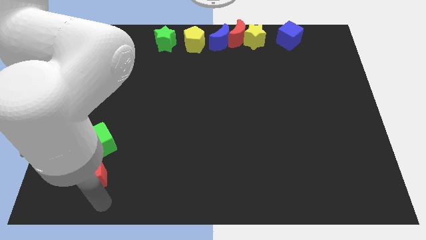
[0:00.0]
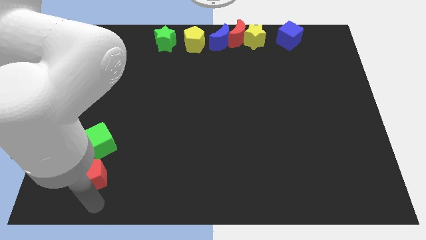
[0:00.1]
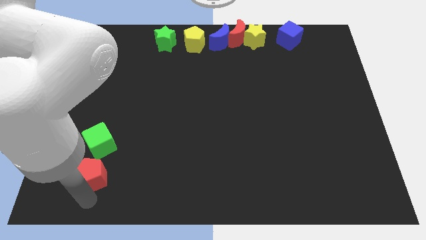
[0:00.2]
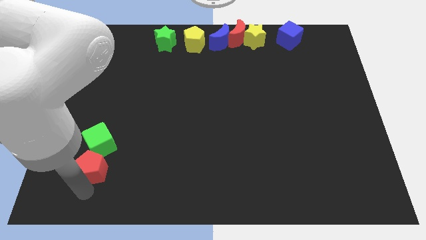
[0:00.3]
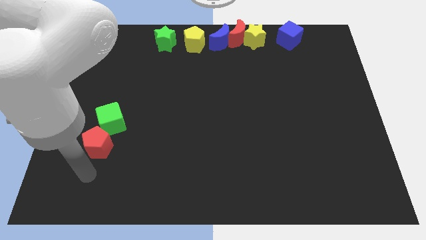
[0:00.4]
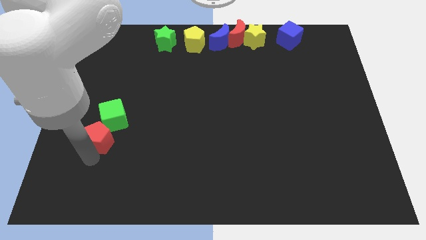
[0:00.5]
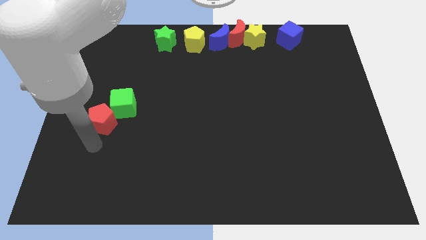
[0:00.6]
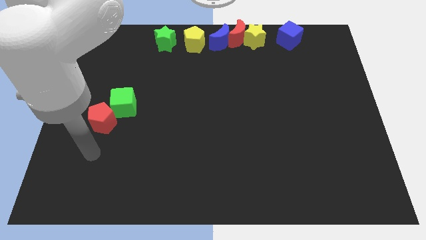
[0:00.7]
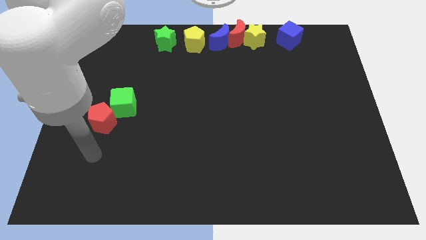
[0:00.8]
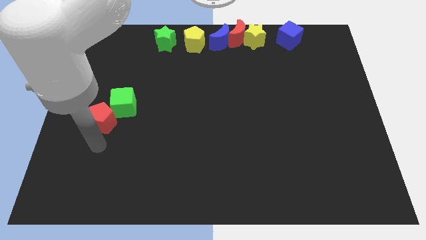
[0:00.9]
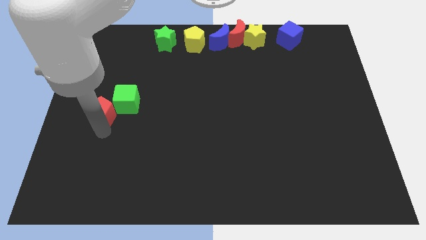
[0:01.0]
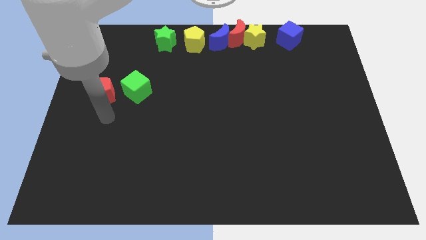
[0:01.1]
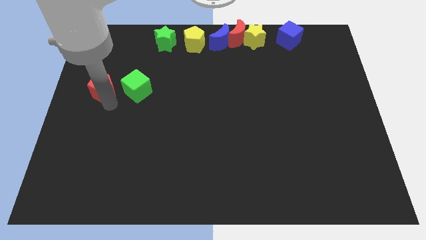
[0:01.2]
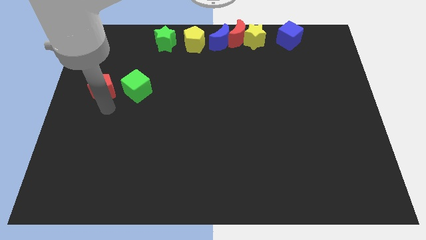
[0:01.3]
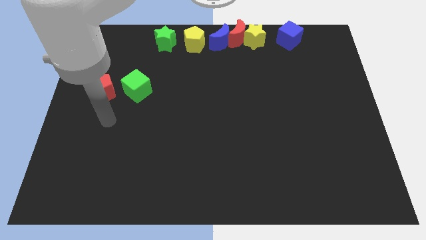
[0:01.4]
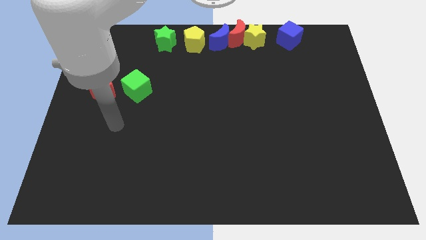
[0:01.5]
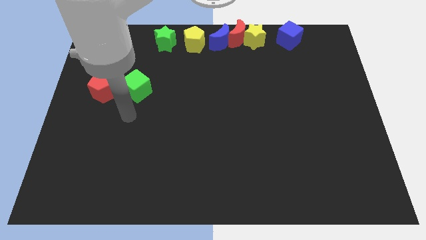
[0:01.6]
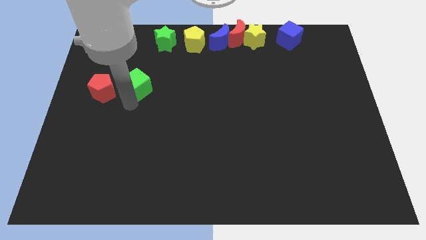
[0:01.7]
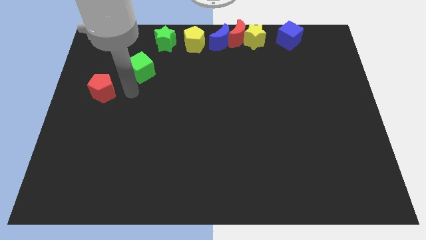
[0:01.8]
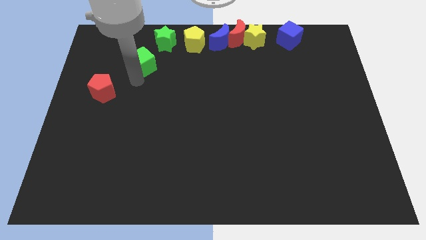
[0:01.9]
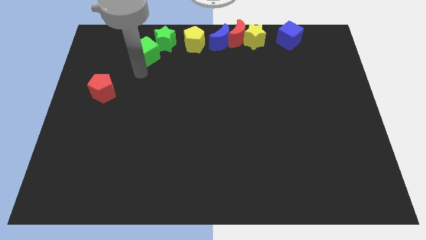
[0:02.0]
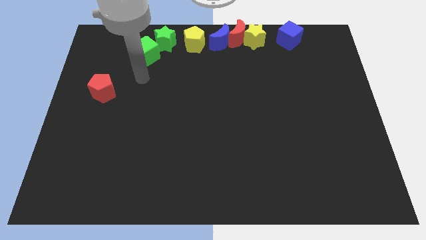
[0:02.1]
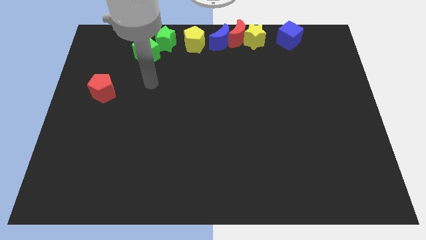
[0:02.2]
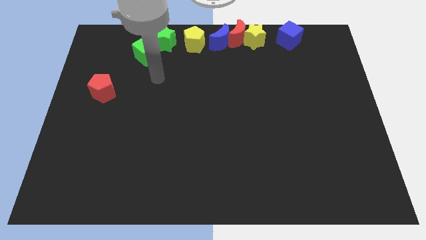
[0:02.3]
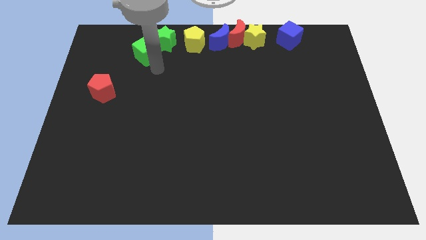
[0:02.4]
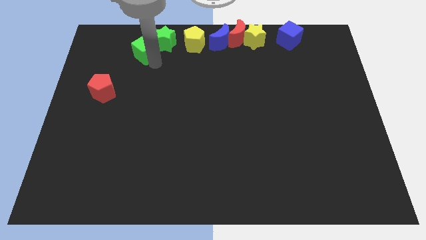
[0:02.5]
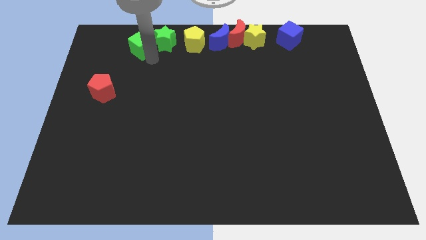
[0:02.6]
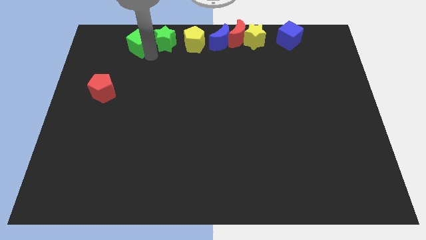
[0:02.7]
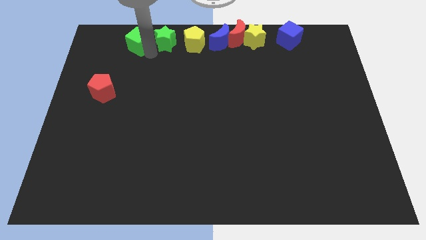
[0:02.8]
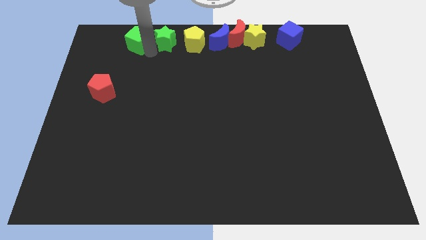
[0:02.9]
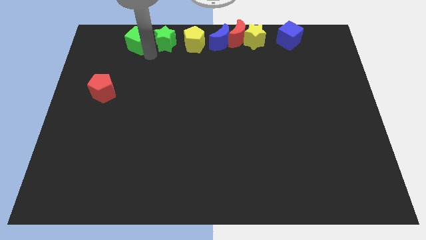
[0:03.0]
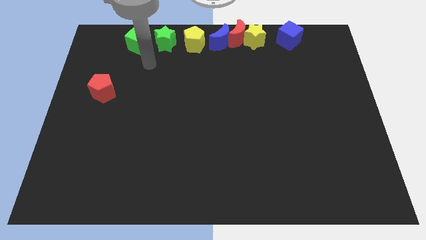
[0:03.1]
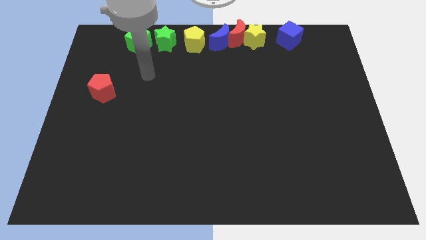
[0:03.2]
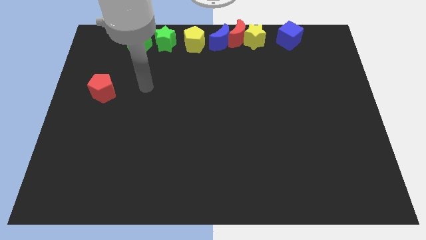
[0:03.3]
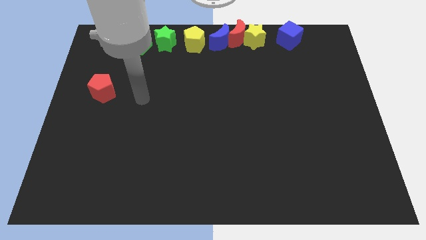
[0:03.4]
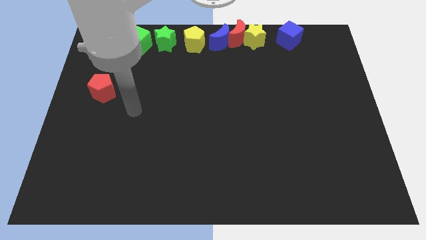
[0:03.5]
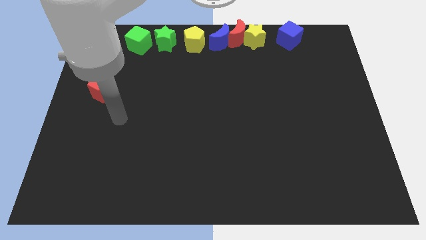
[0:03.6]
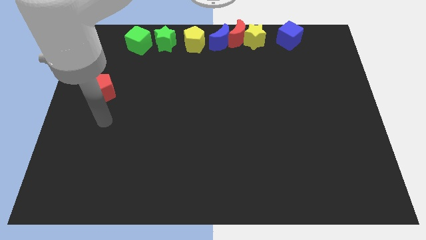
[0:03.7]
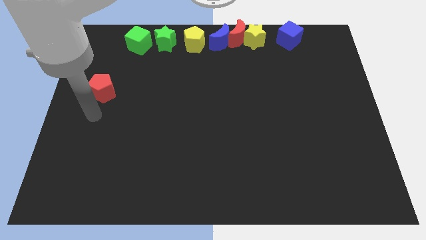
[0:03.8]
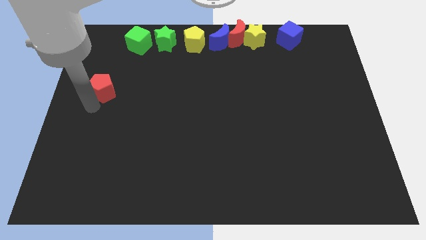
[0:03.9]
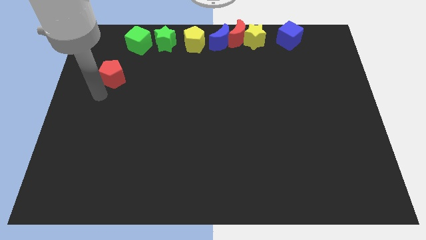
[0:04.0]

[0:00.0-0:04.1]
move the green cube left parallel left to the green star

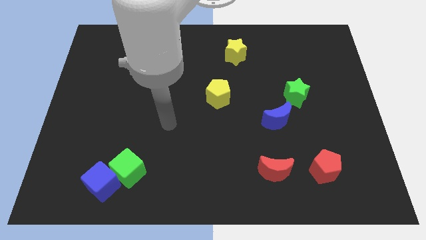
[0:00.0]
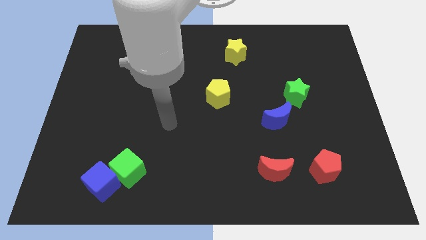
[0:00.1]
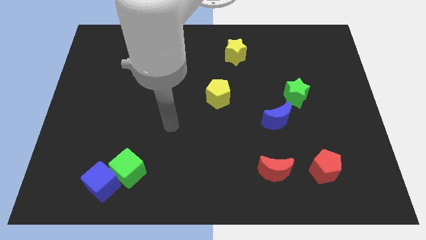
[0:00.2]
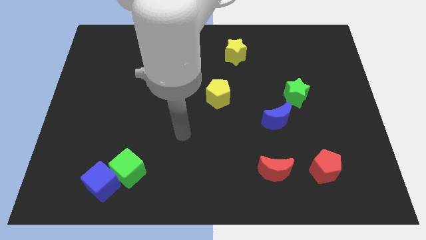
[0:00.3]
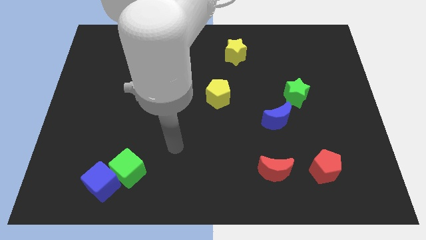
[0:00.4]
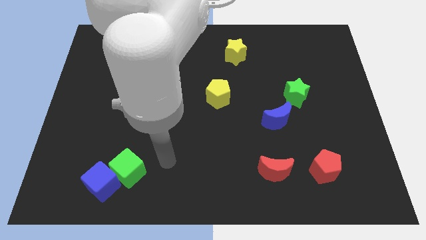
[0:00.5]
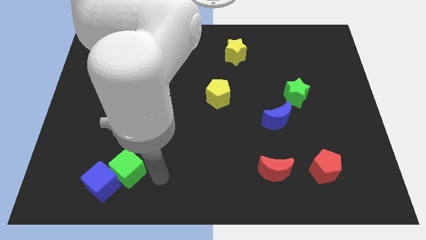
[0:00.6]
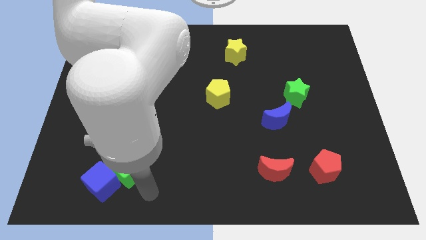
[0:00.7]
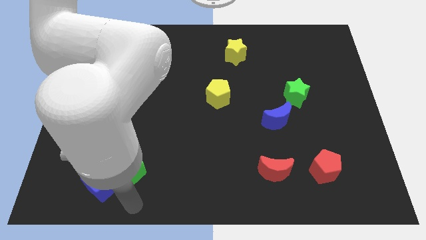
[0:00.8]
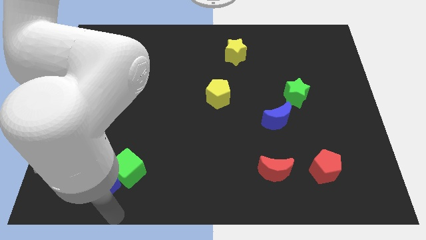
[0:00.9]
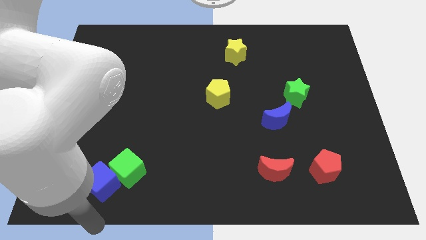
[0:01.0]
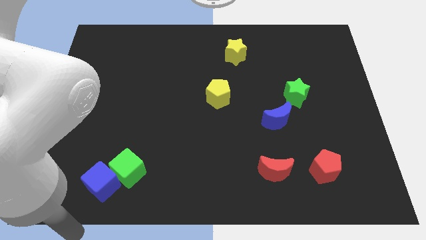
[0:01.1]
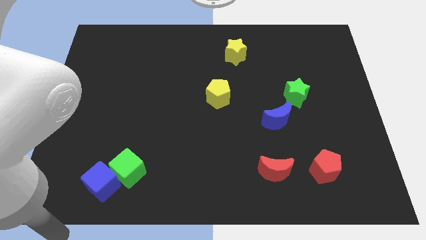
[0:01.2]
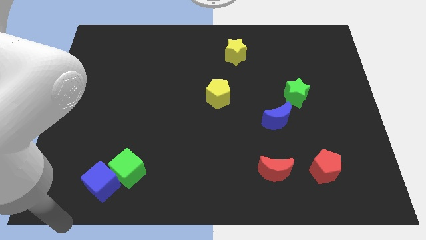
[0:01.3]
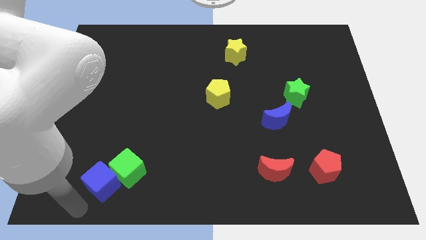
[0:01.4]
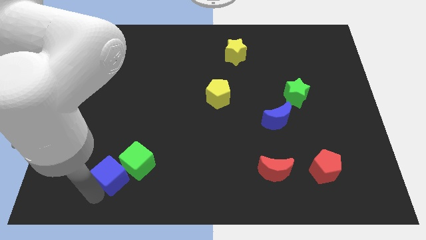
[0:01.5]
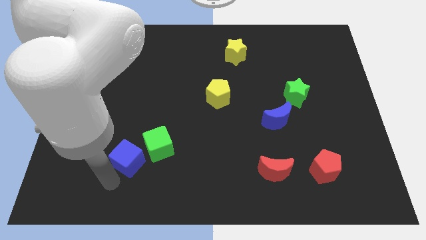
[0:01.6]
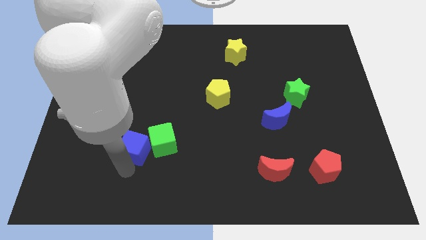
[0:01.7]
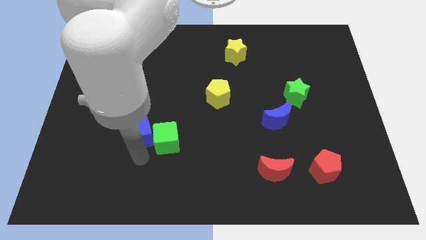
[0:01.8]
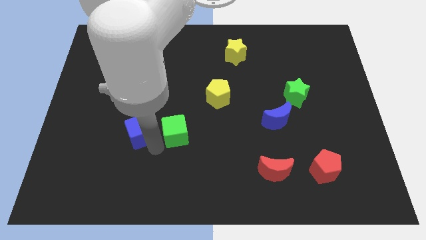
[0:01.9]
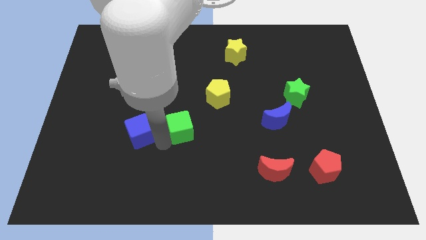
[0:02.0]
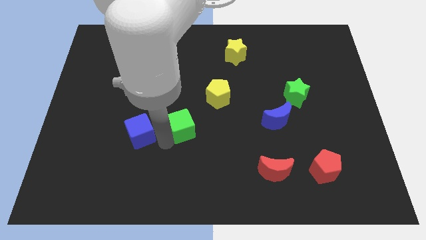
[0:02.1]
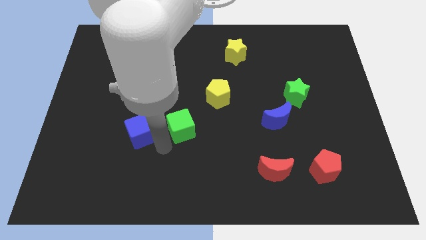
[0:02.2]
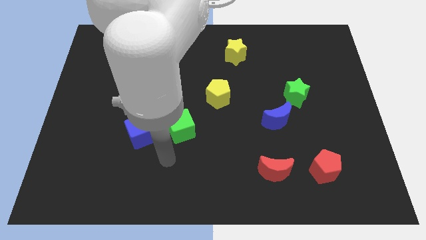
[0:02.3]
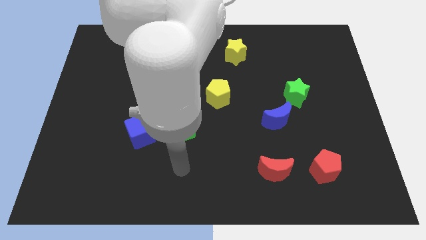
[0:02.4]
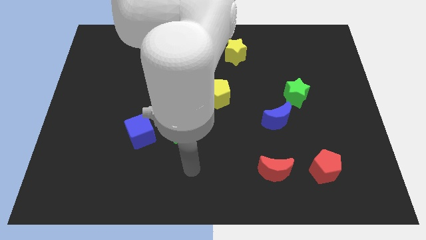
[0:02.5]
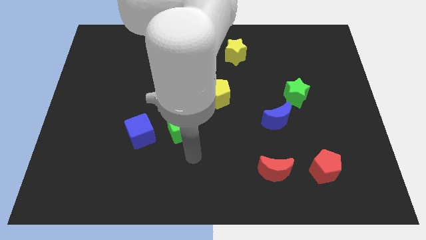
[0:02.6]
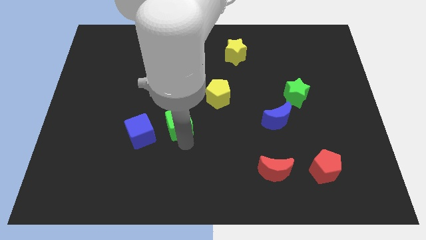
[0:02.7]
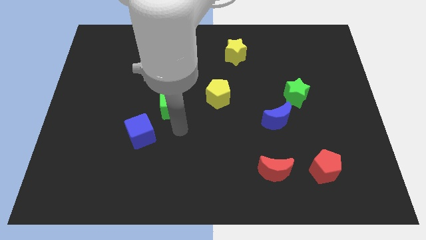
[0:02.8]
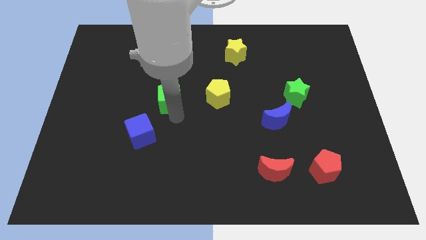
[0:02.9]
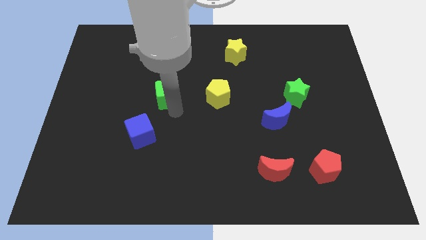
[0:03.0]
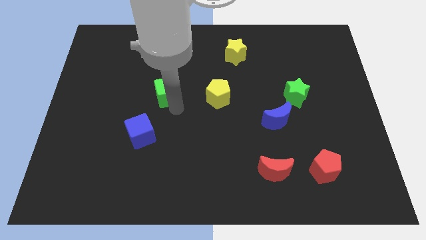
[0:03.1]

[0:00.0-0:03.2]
move the green cube to the left side of the yellow pentagon

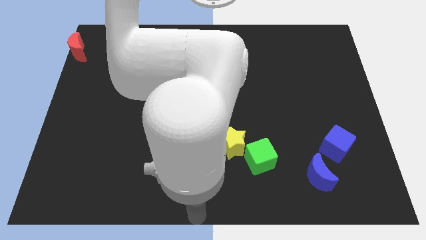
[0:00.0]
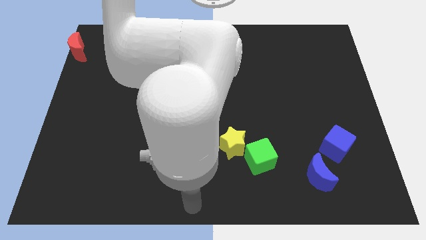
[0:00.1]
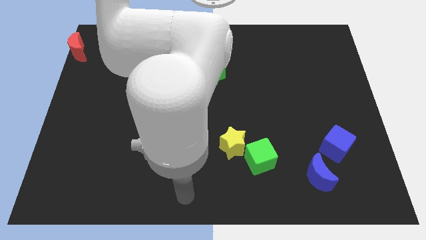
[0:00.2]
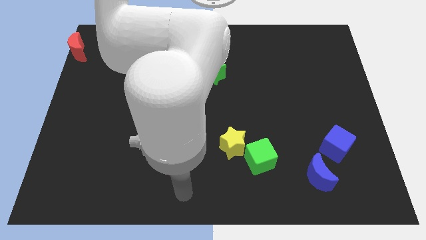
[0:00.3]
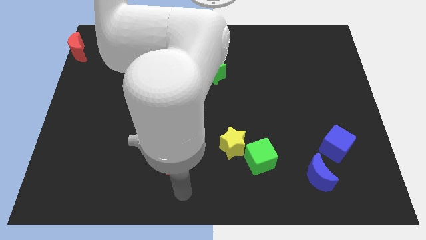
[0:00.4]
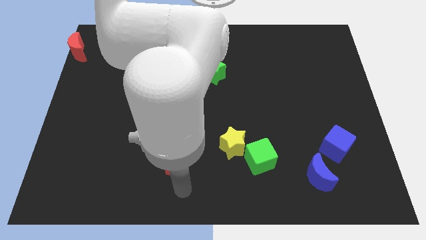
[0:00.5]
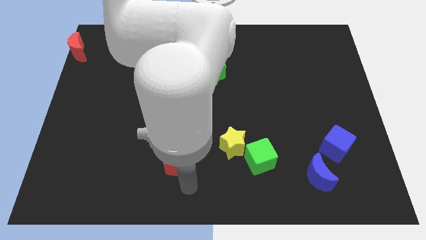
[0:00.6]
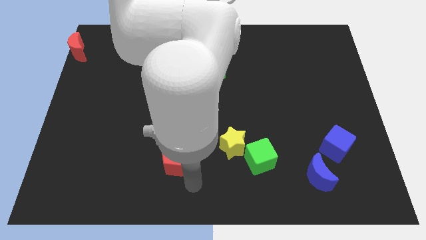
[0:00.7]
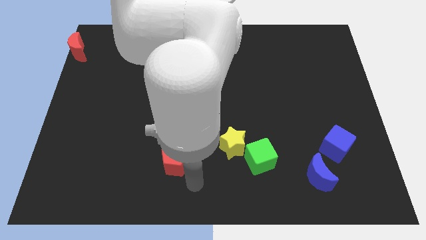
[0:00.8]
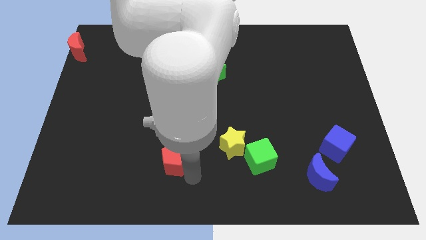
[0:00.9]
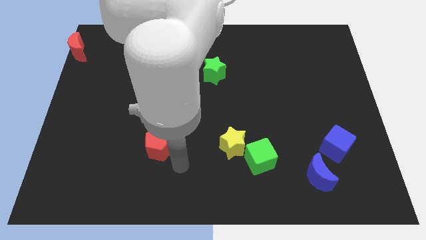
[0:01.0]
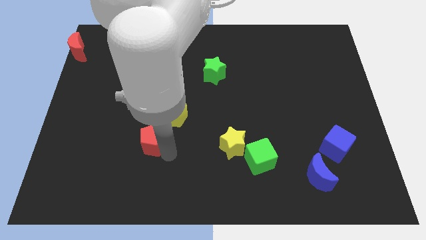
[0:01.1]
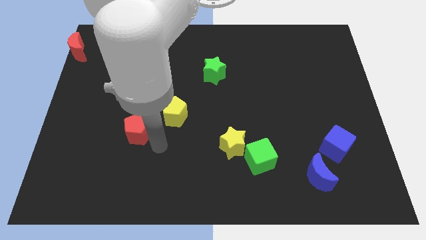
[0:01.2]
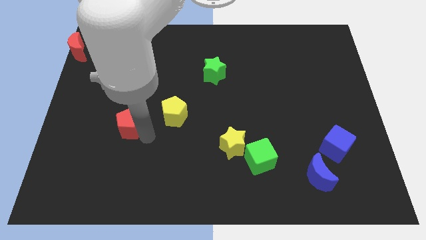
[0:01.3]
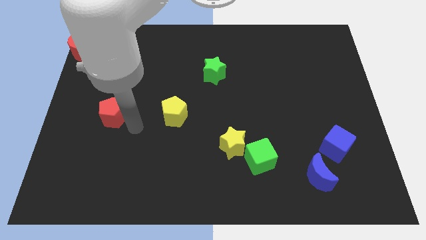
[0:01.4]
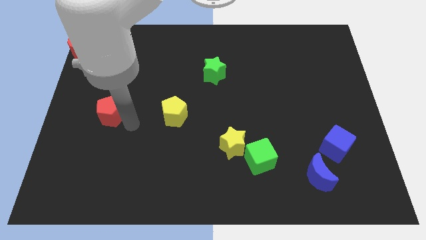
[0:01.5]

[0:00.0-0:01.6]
put the red pentagon to parallel left of yellow pentagon

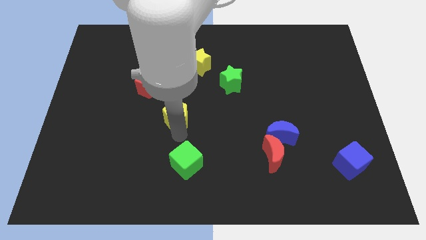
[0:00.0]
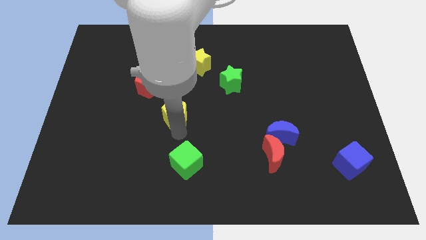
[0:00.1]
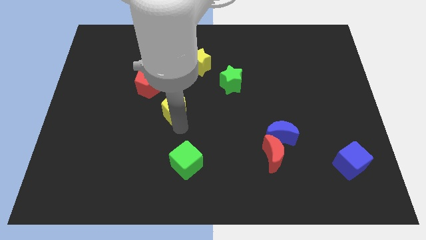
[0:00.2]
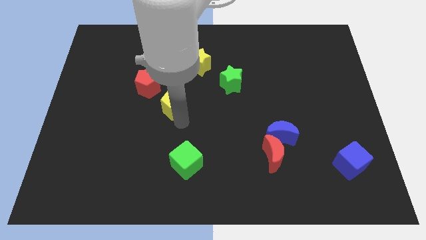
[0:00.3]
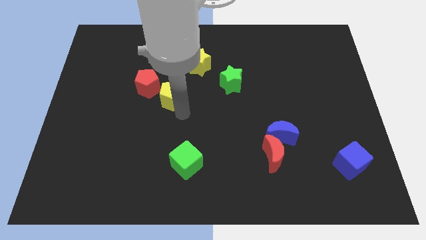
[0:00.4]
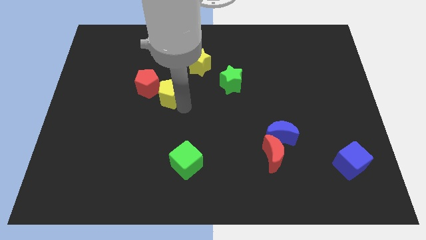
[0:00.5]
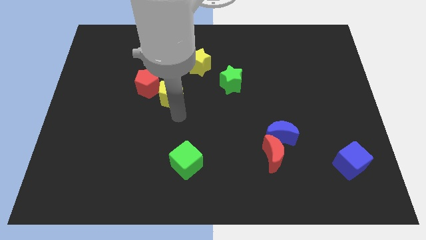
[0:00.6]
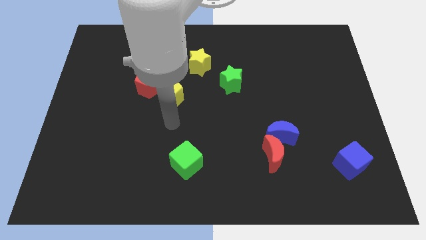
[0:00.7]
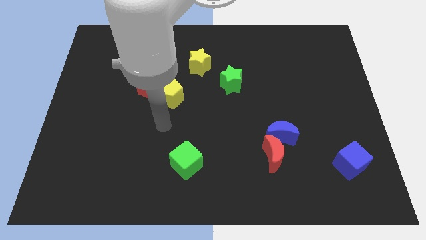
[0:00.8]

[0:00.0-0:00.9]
put yellow pentagon close to red pentagon
